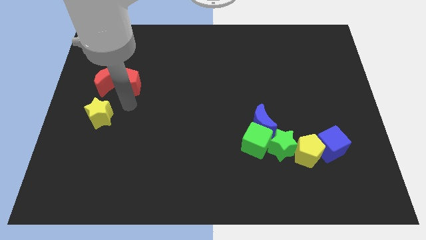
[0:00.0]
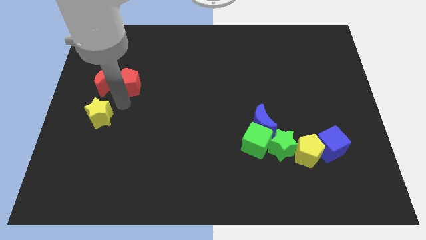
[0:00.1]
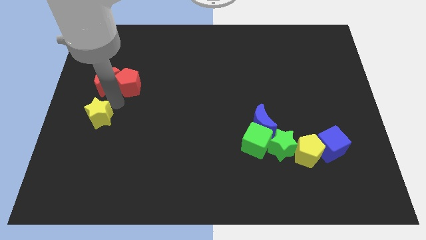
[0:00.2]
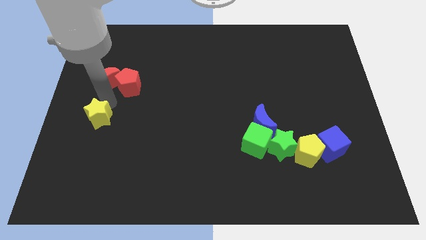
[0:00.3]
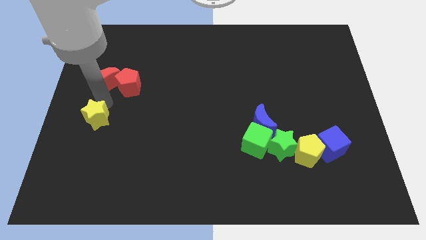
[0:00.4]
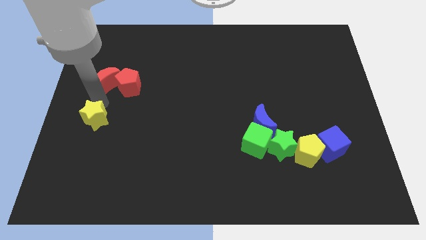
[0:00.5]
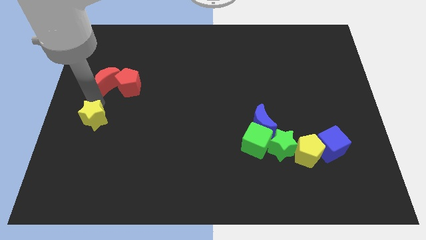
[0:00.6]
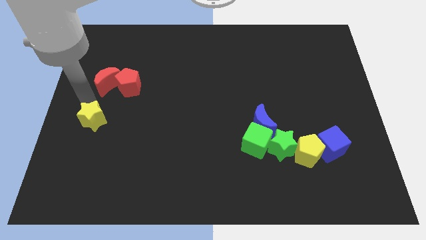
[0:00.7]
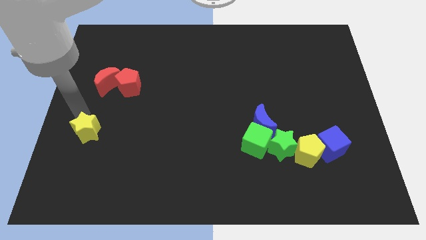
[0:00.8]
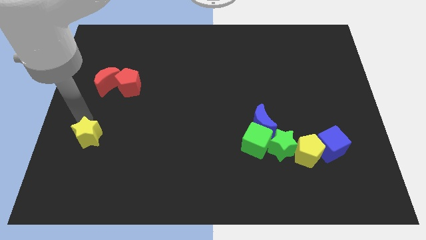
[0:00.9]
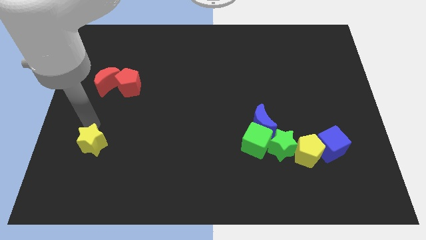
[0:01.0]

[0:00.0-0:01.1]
push the yellow star slightly towards the bottom left

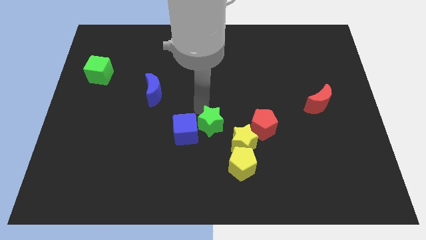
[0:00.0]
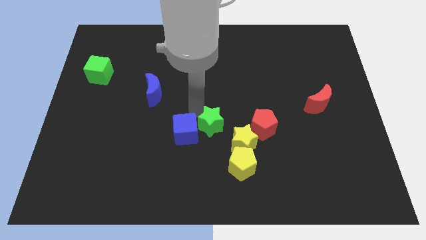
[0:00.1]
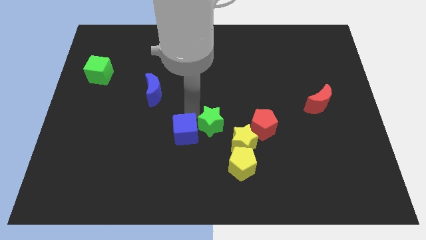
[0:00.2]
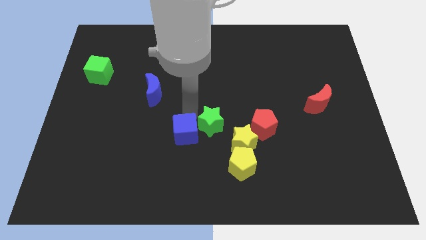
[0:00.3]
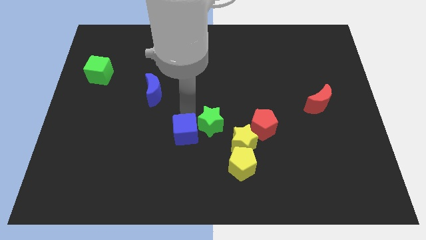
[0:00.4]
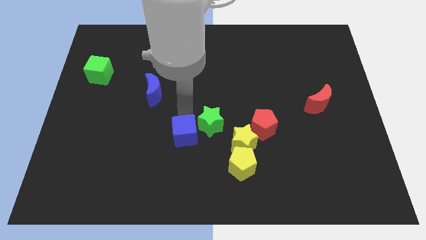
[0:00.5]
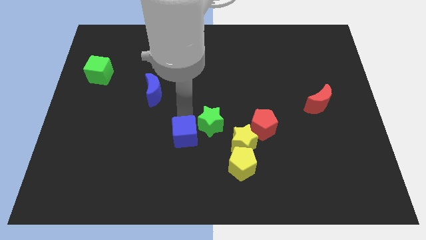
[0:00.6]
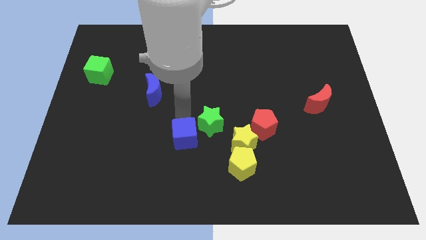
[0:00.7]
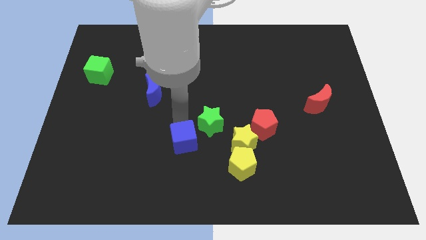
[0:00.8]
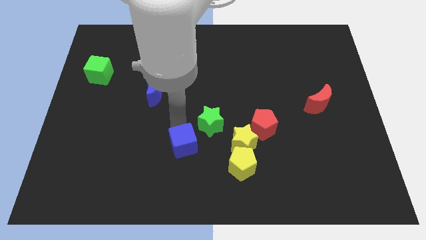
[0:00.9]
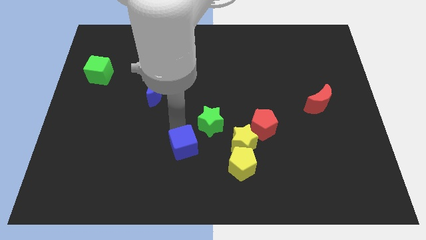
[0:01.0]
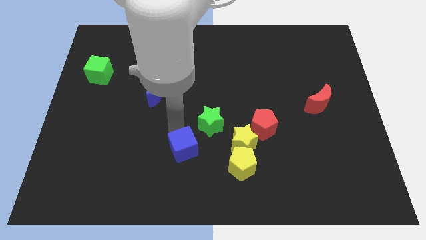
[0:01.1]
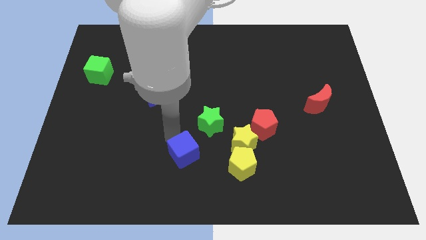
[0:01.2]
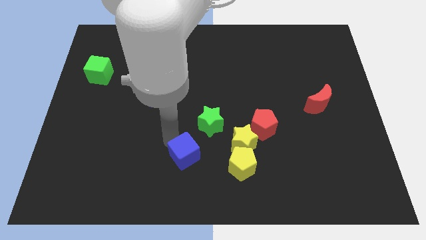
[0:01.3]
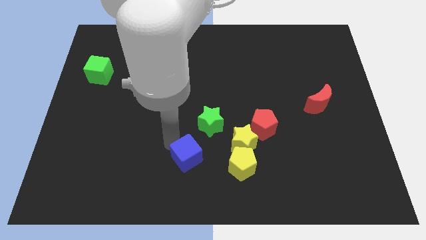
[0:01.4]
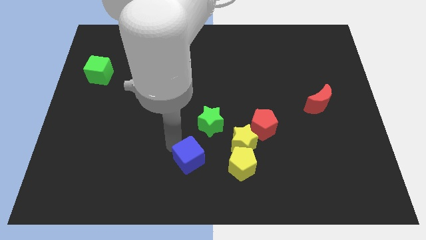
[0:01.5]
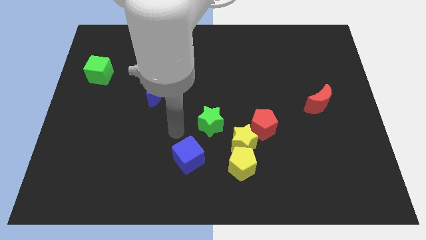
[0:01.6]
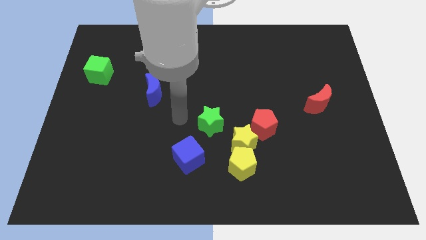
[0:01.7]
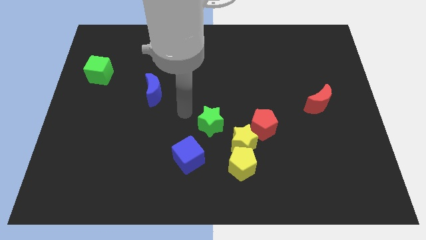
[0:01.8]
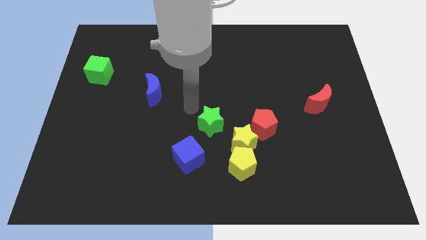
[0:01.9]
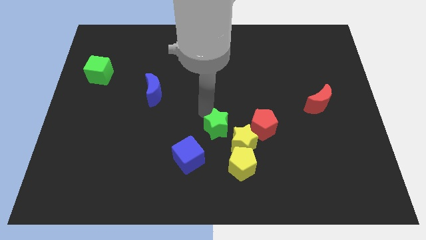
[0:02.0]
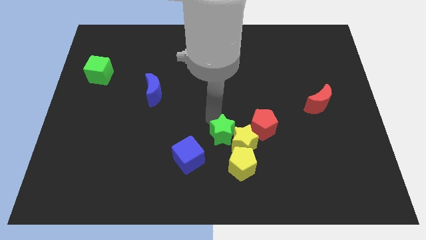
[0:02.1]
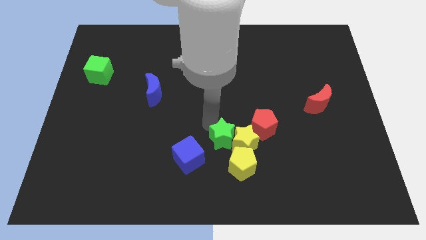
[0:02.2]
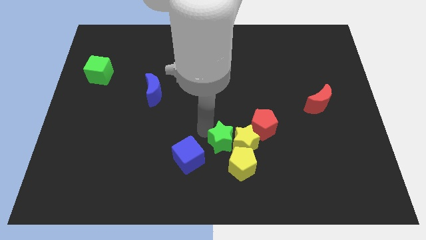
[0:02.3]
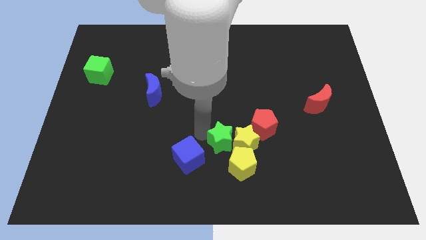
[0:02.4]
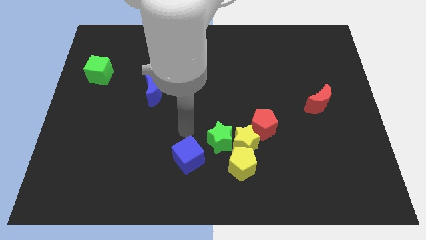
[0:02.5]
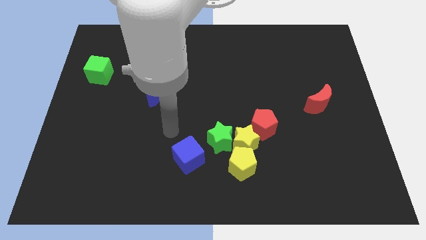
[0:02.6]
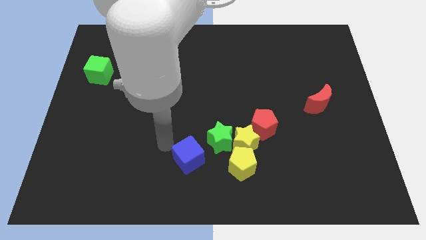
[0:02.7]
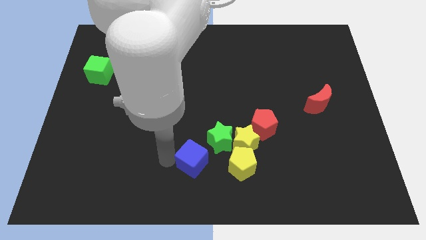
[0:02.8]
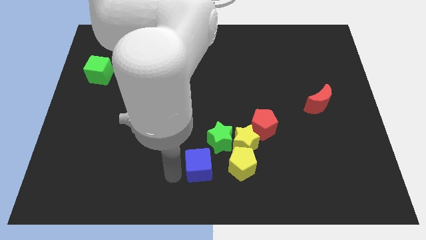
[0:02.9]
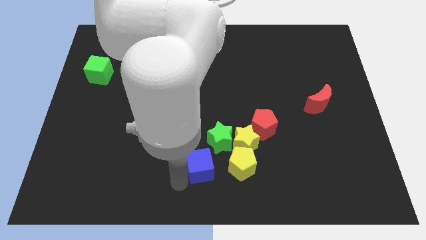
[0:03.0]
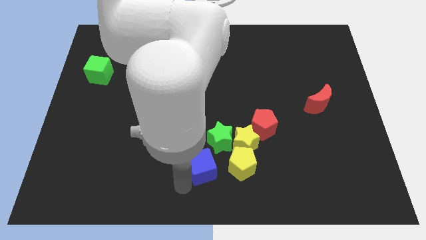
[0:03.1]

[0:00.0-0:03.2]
push the green star and blue cube towards the yellow blocks

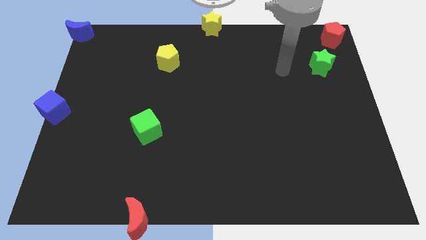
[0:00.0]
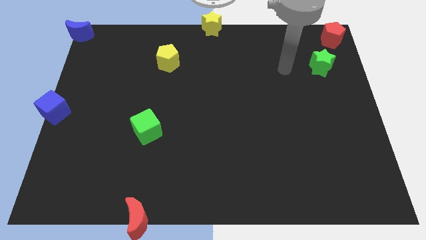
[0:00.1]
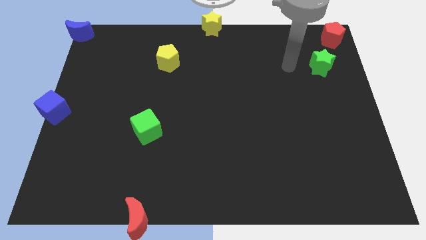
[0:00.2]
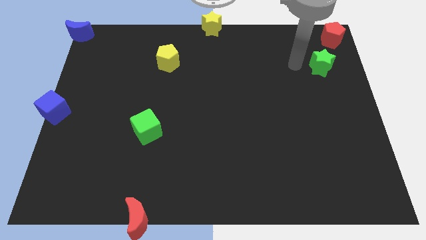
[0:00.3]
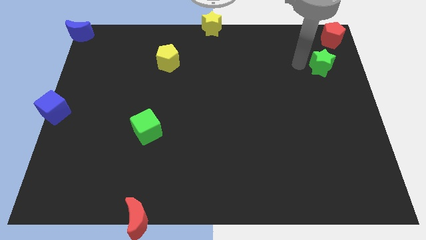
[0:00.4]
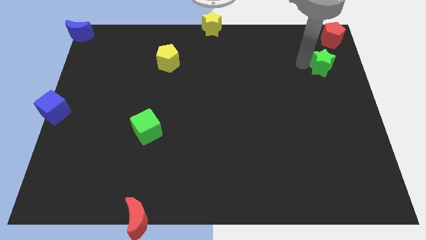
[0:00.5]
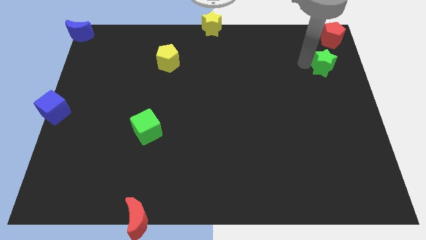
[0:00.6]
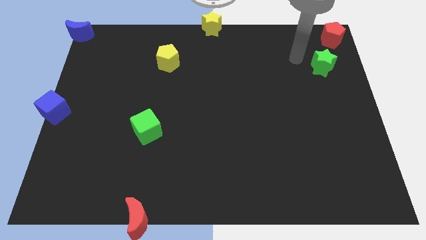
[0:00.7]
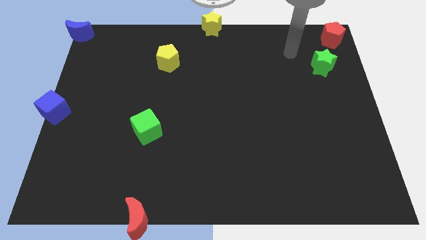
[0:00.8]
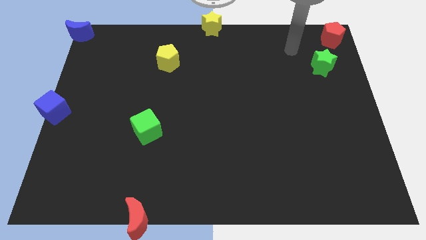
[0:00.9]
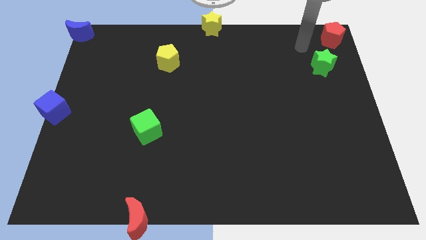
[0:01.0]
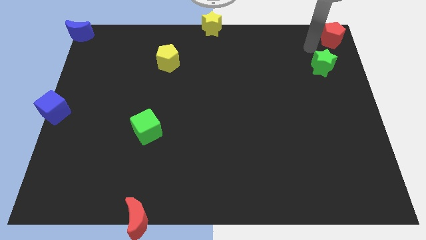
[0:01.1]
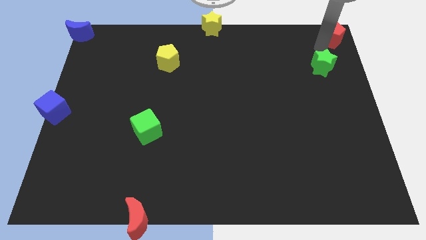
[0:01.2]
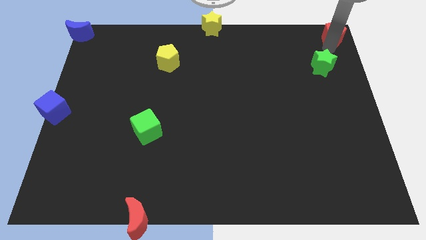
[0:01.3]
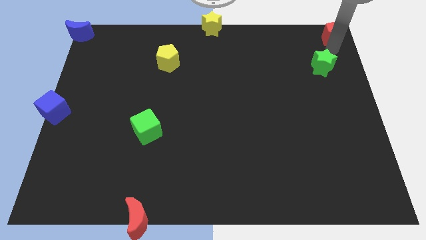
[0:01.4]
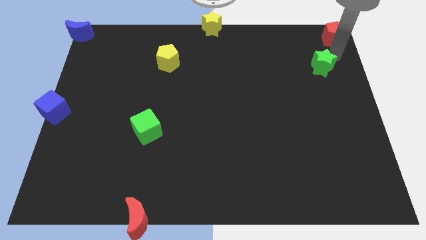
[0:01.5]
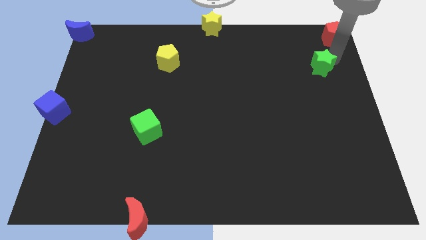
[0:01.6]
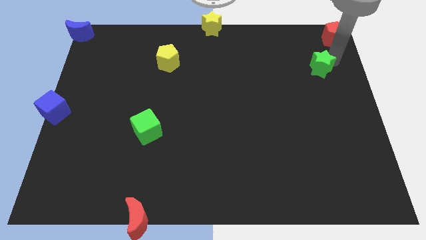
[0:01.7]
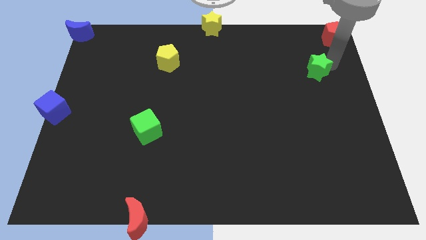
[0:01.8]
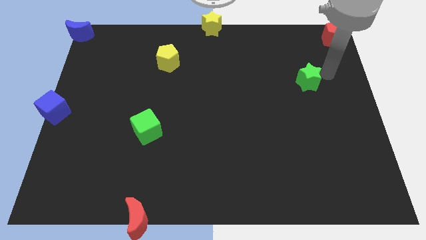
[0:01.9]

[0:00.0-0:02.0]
place the green star diagonally to red moon

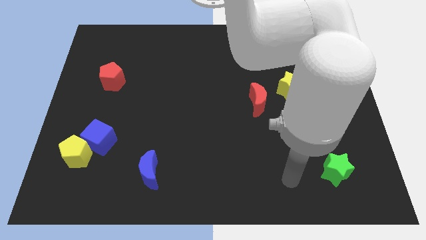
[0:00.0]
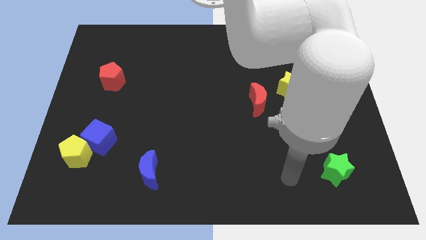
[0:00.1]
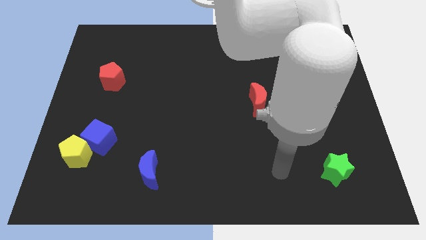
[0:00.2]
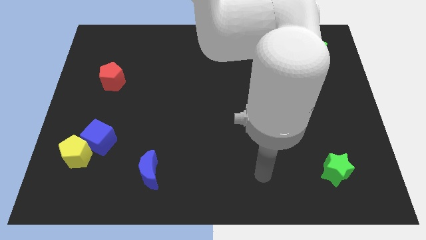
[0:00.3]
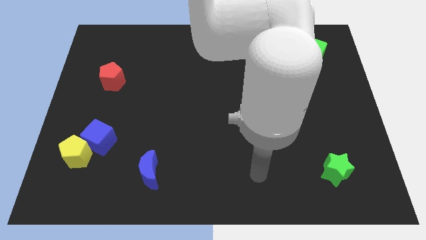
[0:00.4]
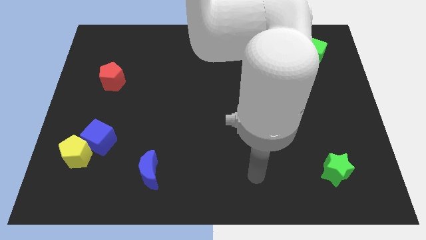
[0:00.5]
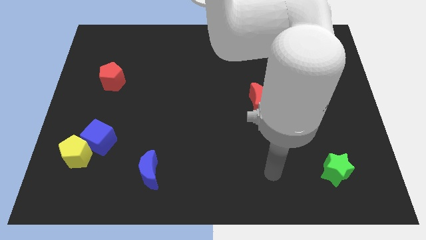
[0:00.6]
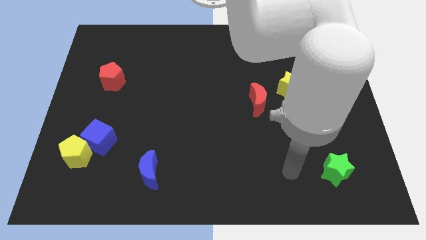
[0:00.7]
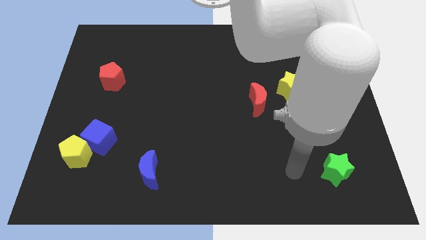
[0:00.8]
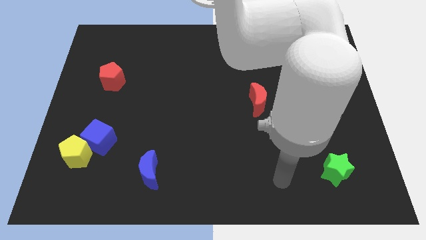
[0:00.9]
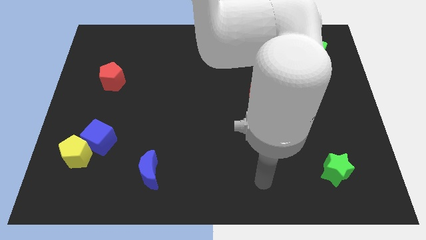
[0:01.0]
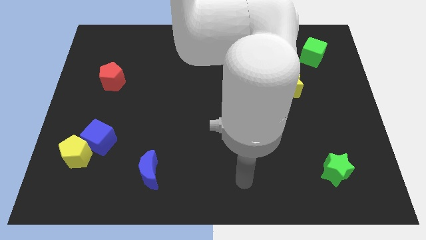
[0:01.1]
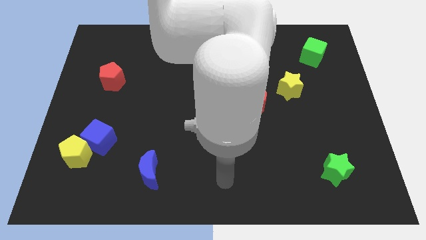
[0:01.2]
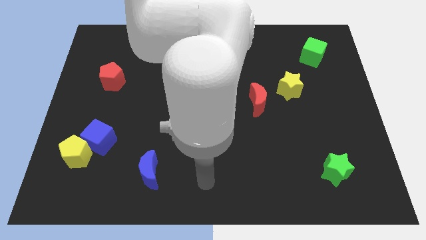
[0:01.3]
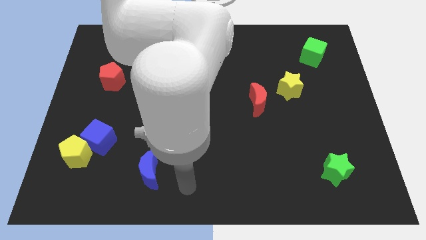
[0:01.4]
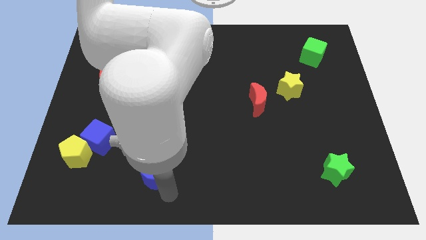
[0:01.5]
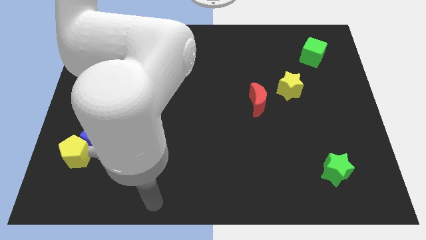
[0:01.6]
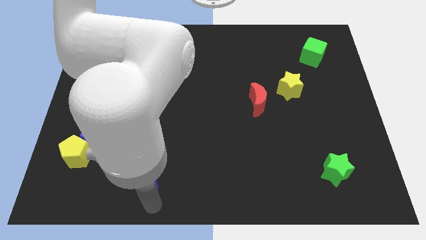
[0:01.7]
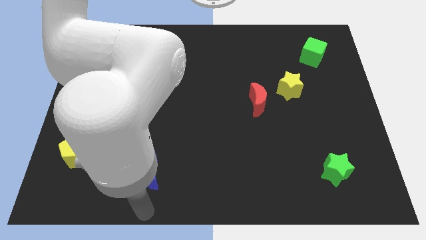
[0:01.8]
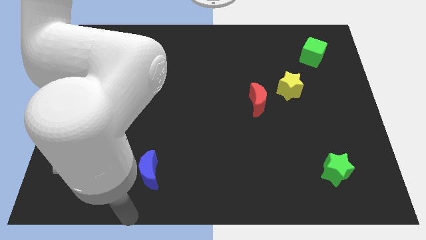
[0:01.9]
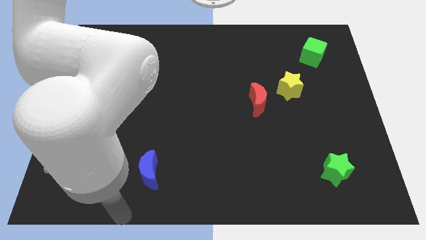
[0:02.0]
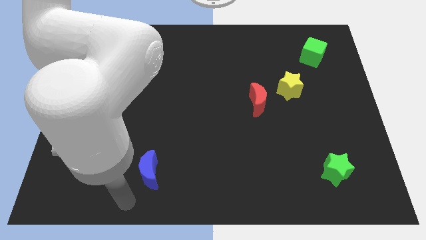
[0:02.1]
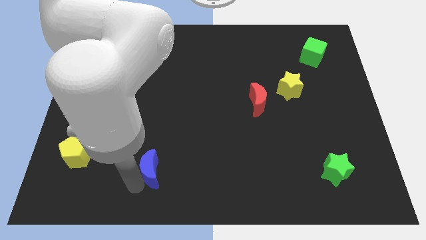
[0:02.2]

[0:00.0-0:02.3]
move your arm from green star to blue crescent

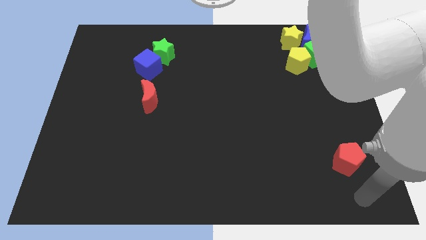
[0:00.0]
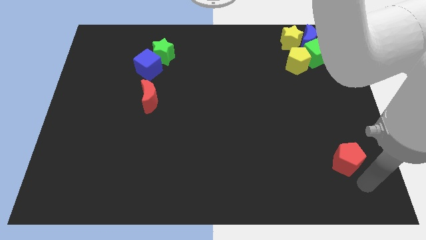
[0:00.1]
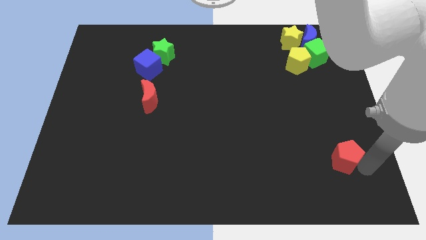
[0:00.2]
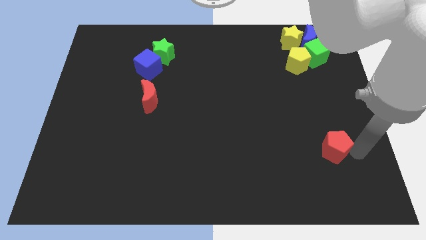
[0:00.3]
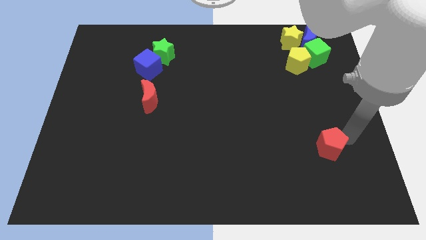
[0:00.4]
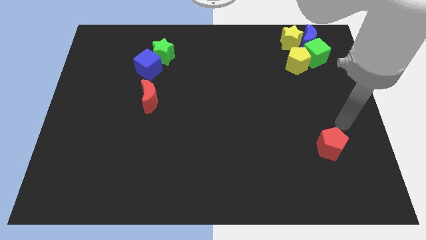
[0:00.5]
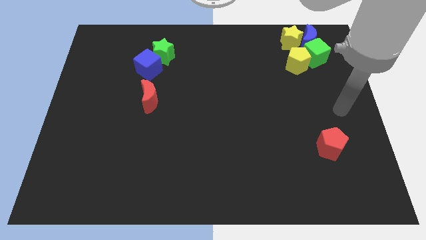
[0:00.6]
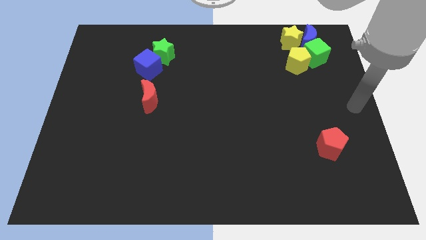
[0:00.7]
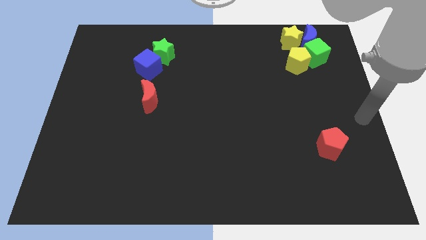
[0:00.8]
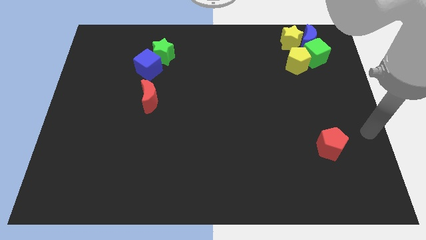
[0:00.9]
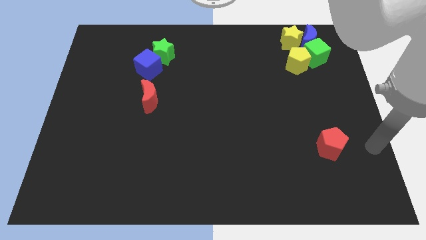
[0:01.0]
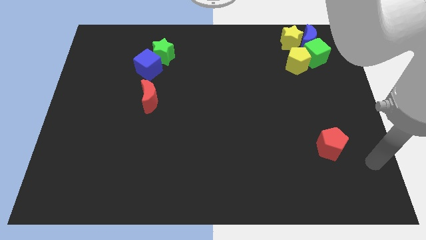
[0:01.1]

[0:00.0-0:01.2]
point your arm at the right side of the red pentagon
